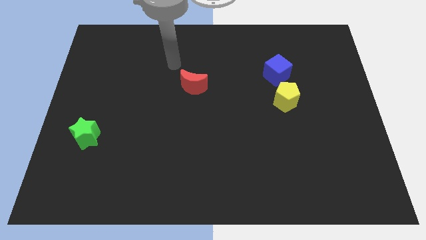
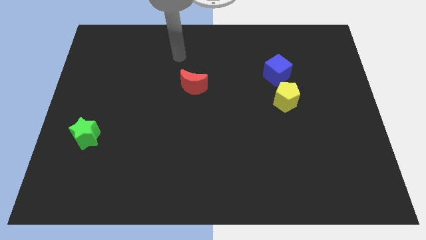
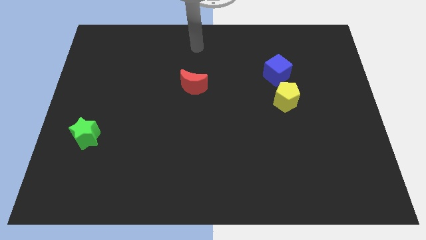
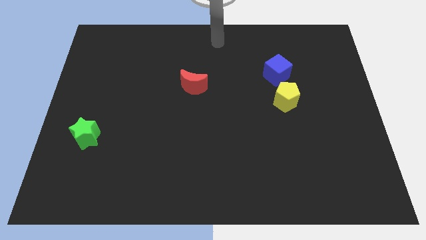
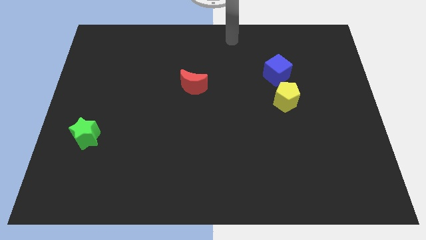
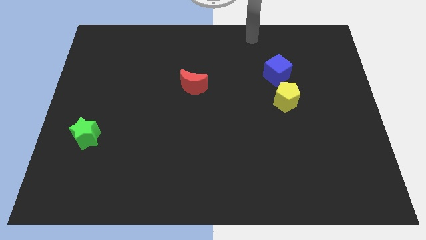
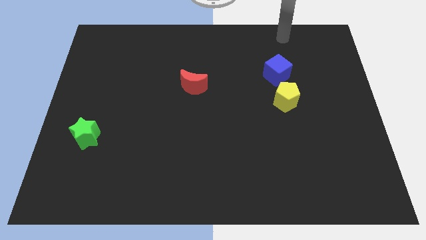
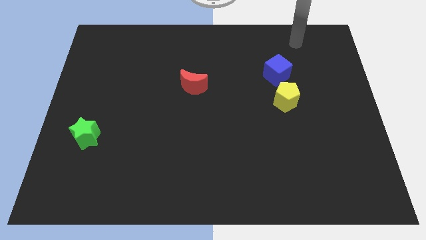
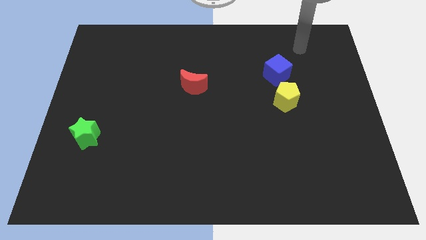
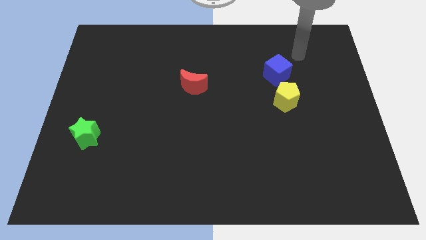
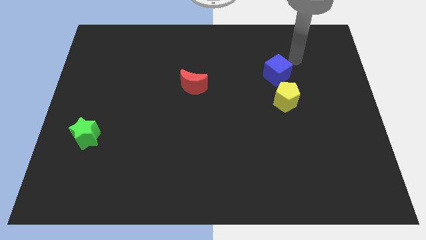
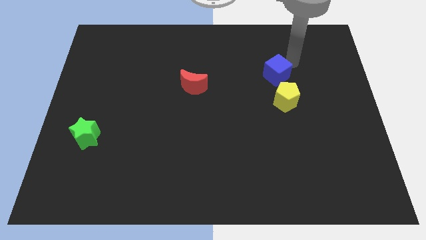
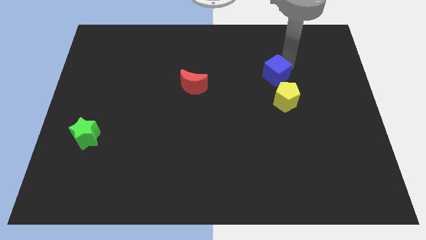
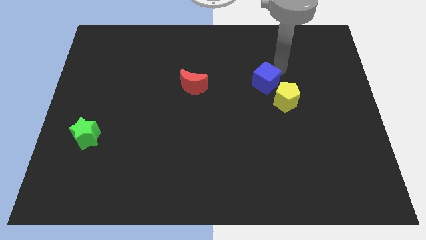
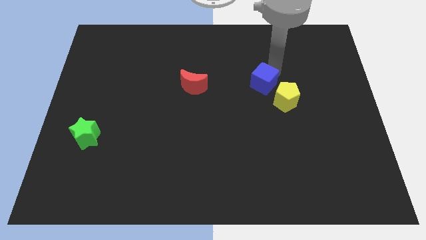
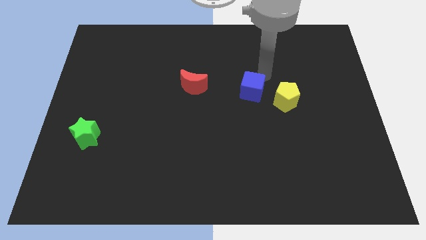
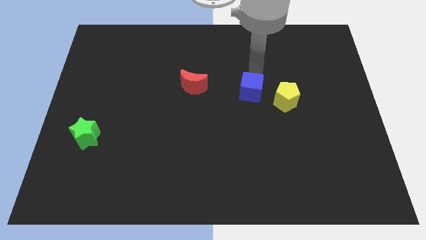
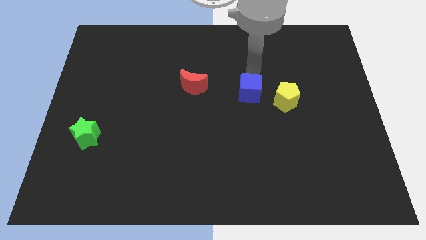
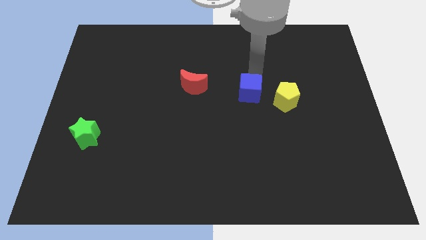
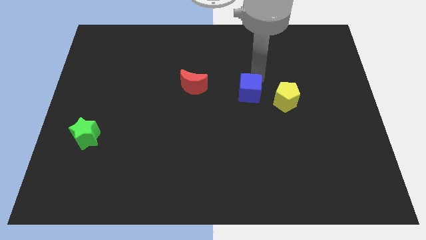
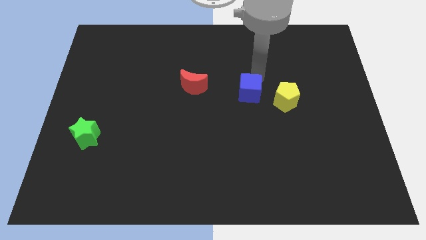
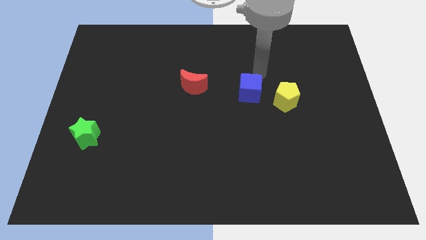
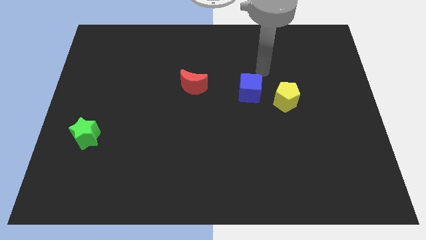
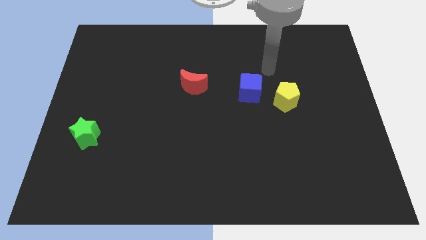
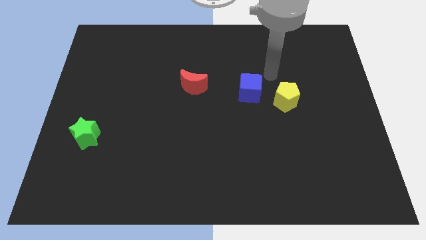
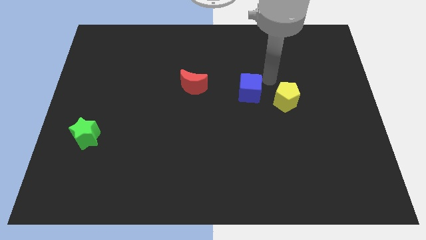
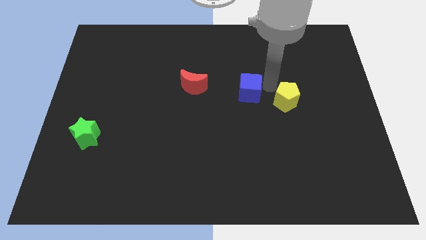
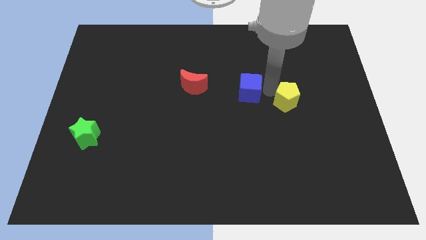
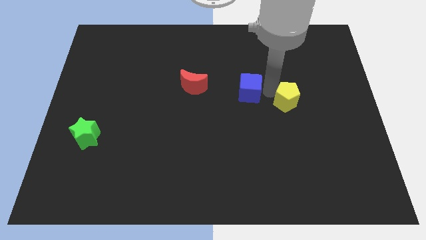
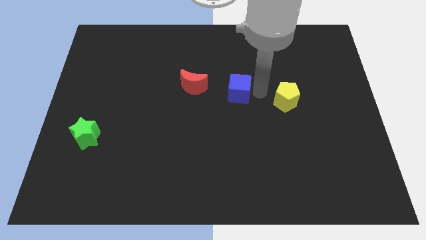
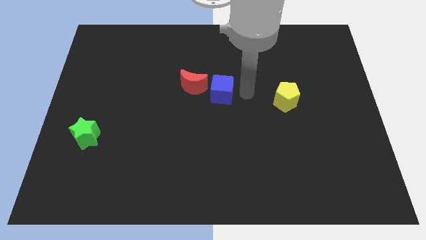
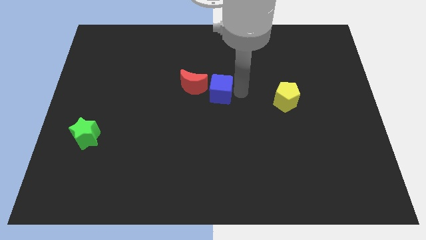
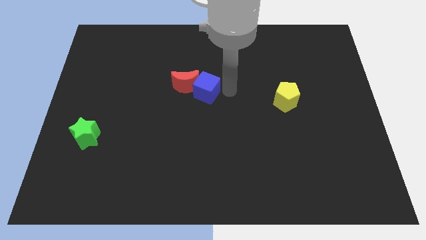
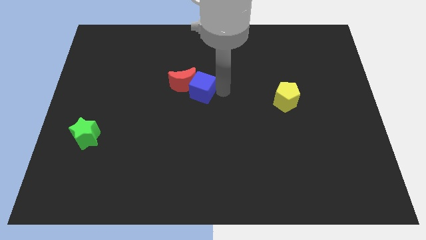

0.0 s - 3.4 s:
put the blue cube next to the red moon

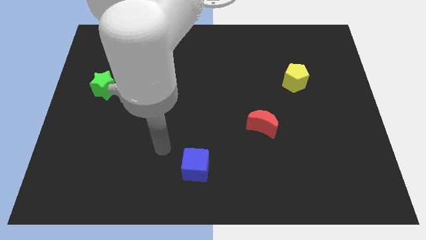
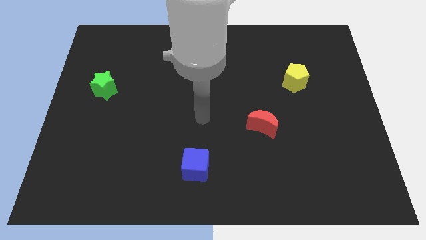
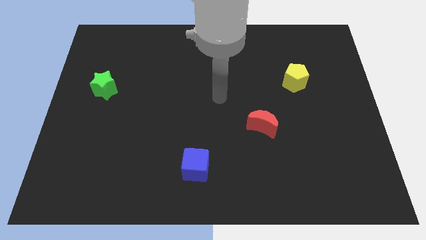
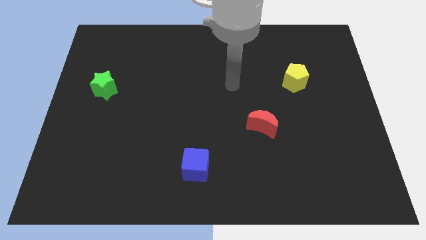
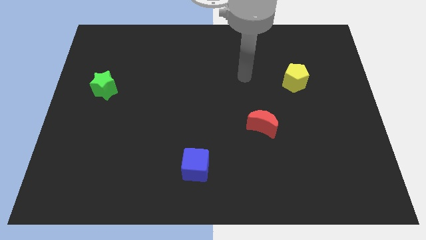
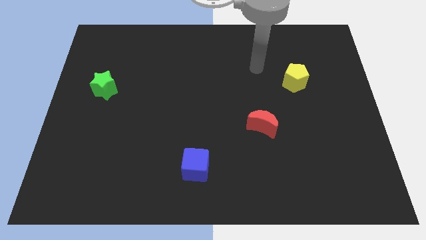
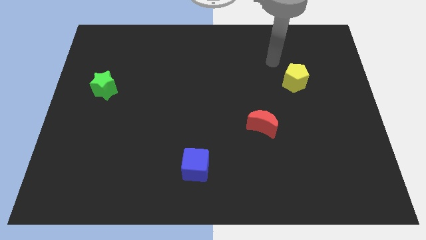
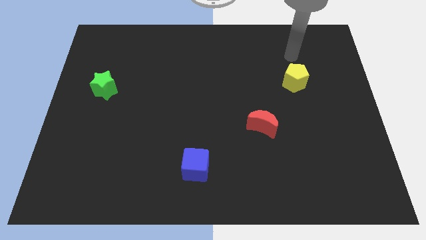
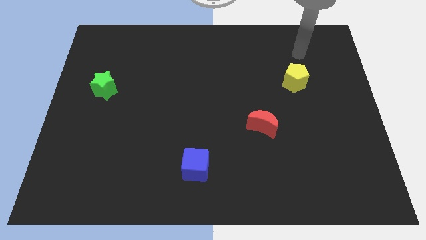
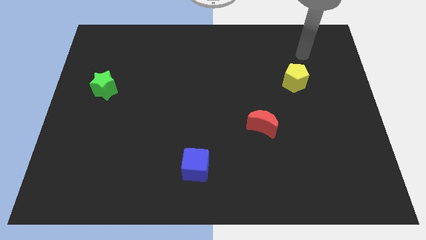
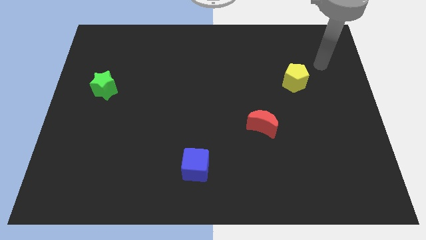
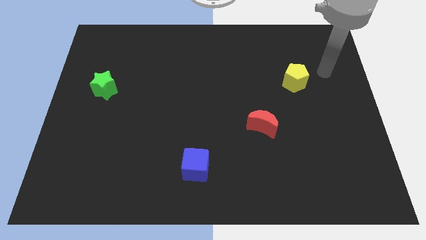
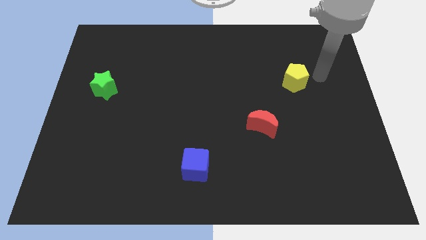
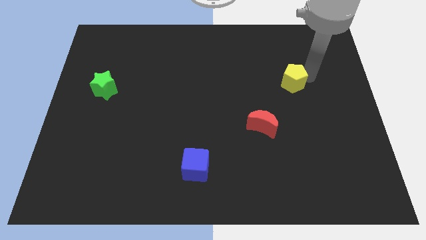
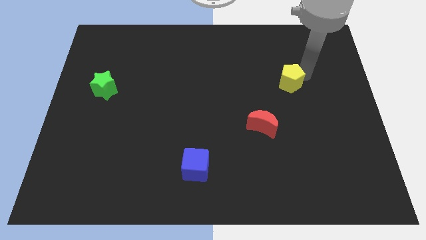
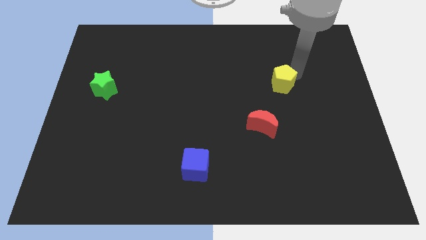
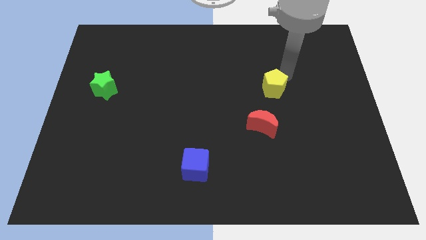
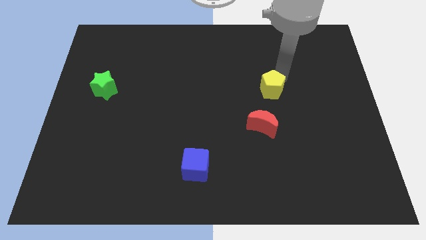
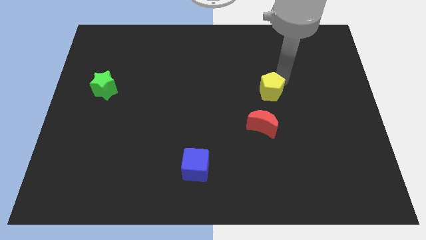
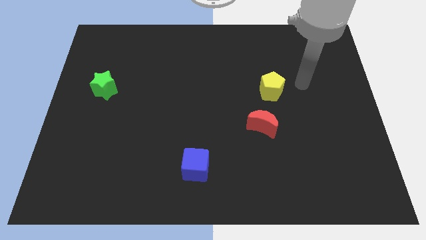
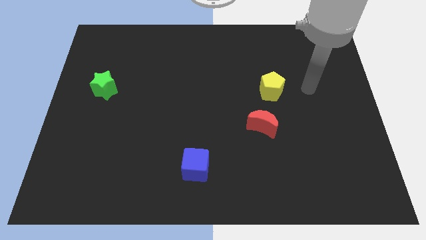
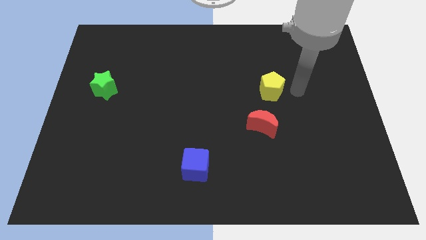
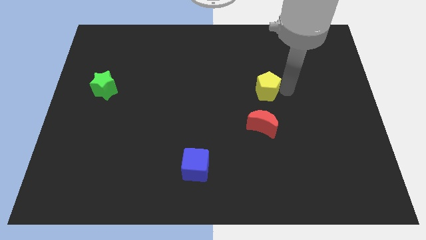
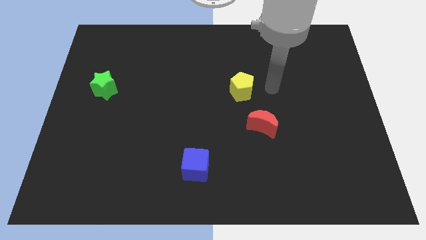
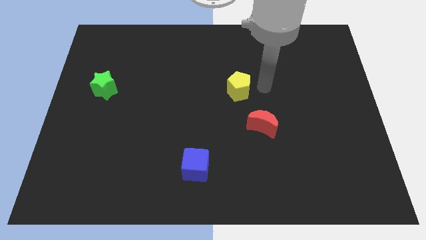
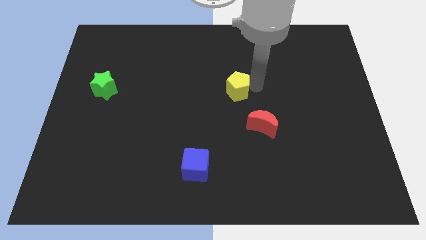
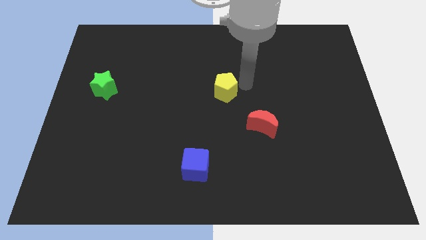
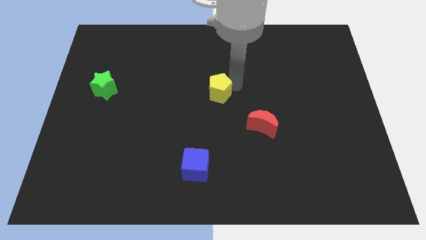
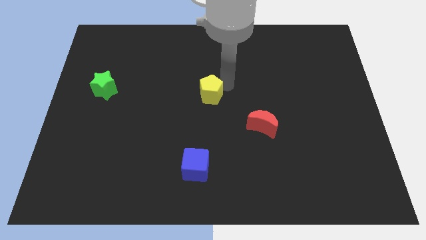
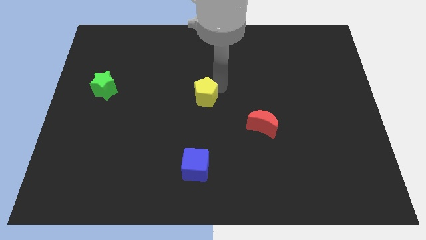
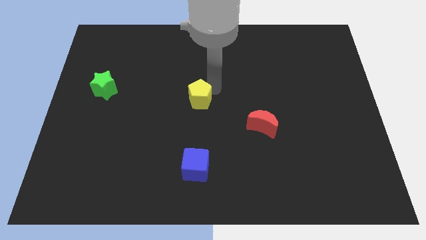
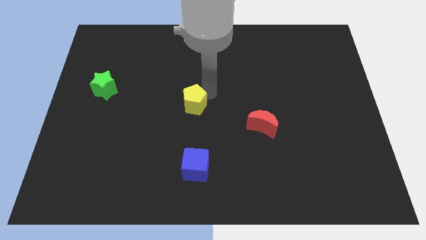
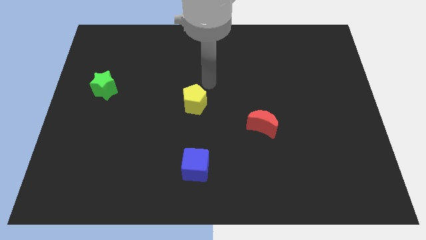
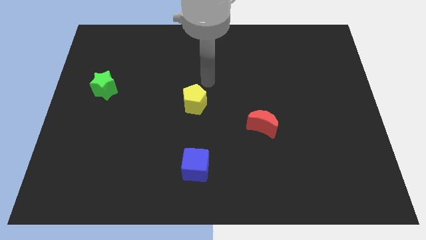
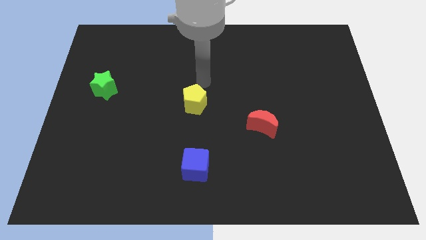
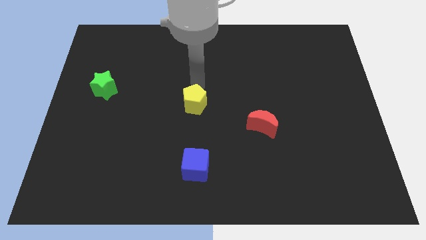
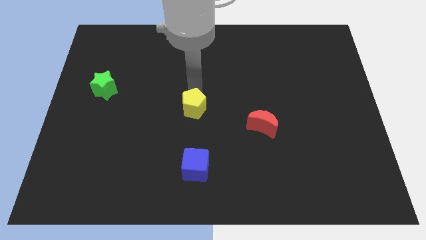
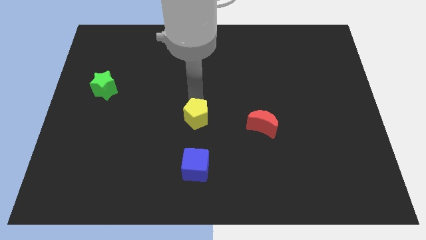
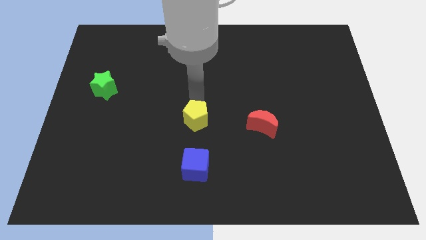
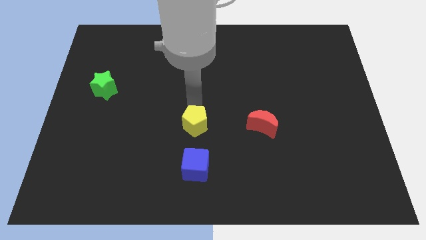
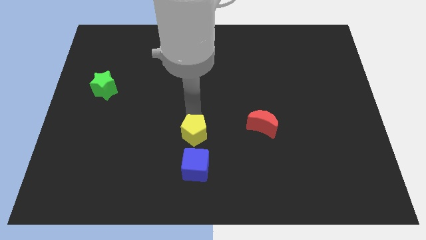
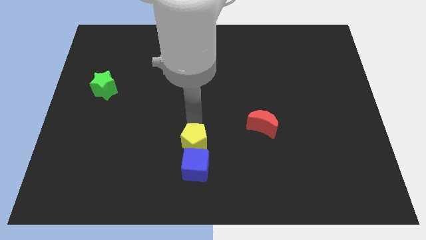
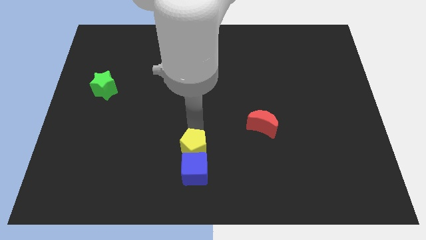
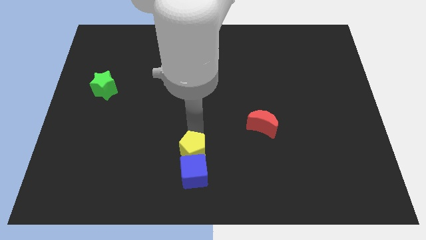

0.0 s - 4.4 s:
push the yellow pentagon next to the blue block

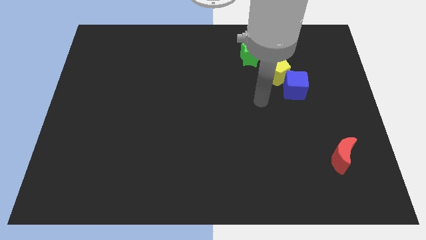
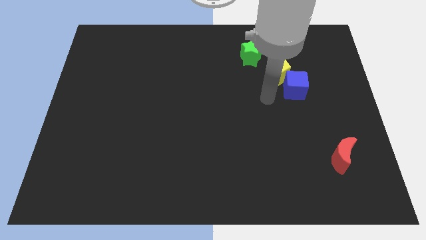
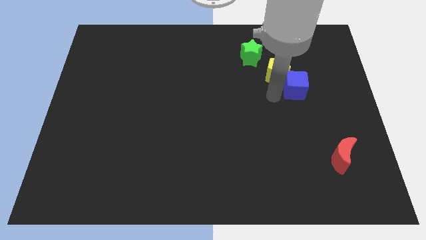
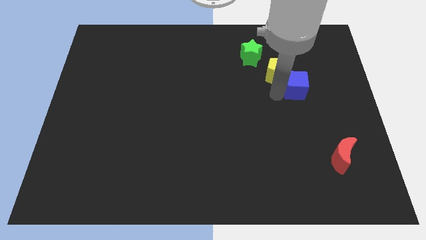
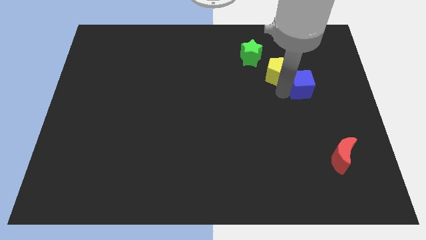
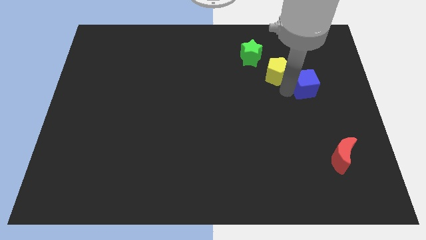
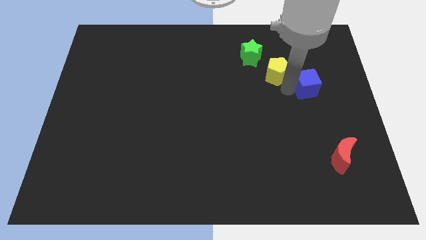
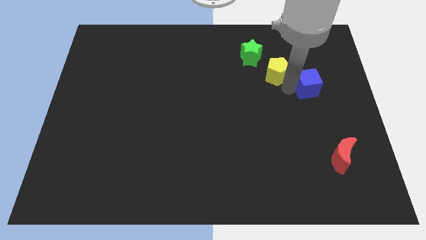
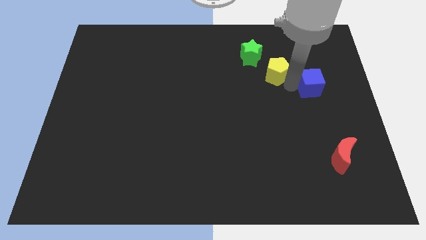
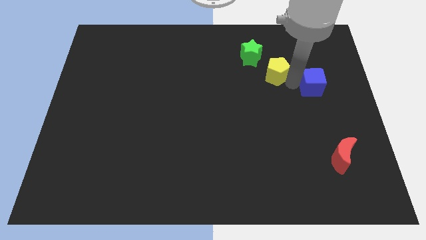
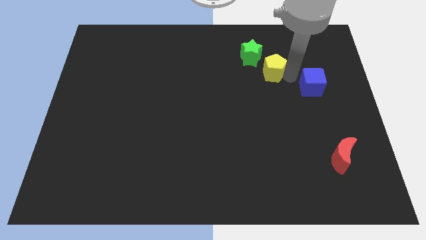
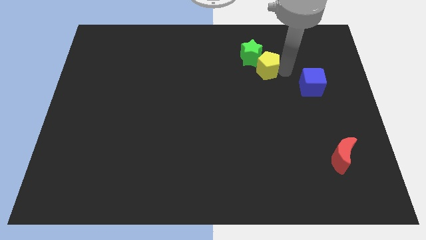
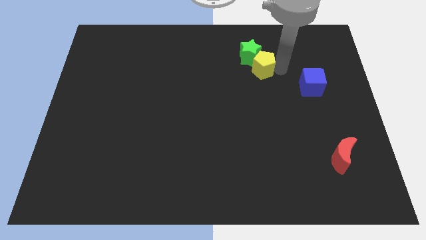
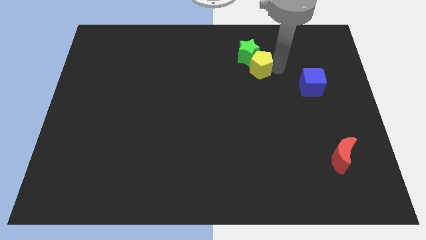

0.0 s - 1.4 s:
slide the yellow block towards the star
